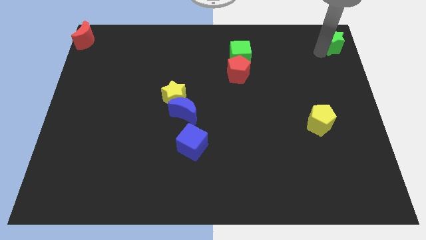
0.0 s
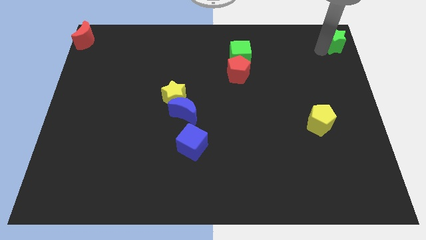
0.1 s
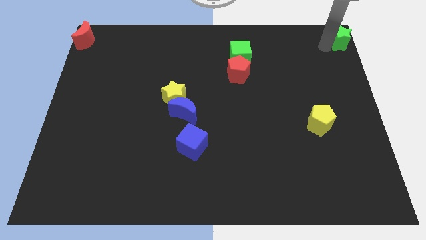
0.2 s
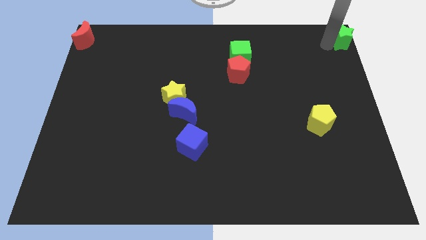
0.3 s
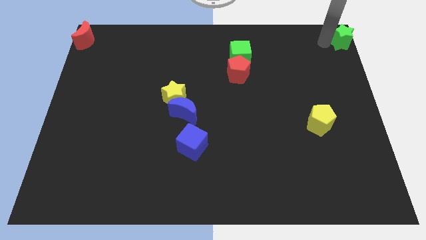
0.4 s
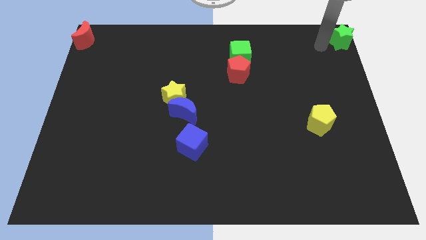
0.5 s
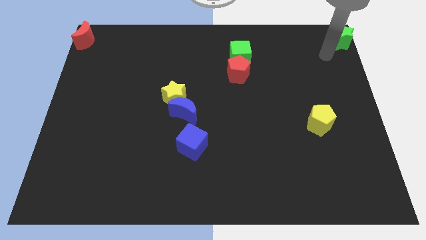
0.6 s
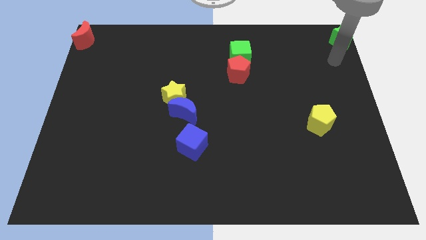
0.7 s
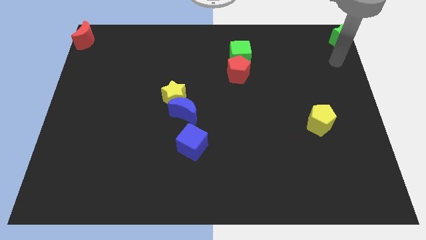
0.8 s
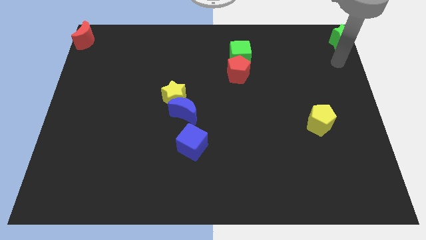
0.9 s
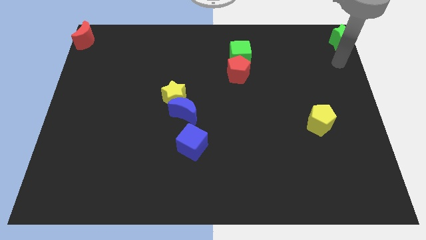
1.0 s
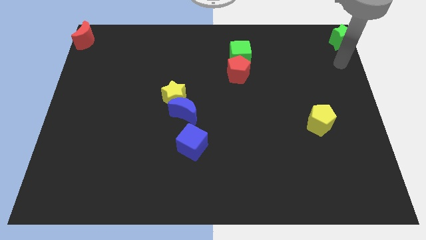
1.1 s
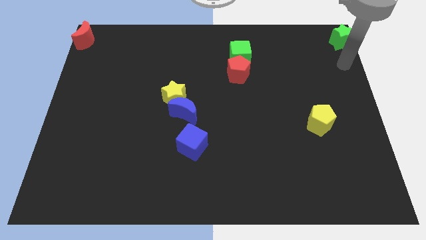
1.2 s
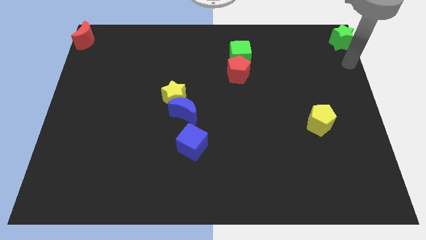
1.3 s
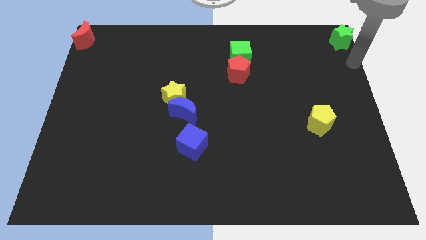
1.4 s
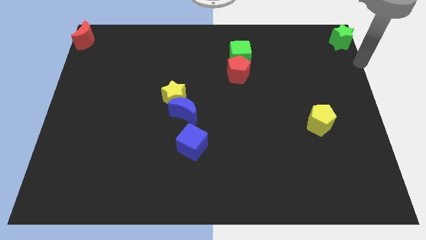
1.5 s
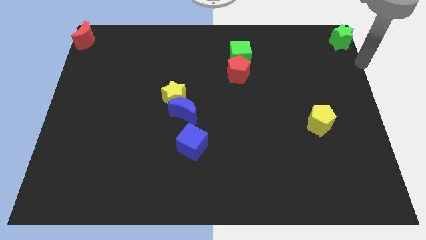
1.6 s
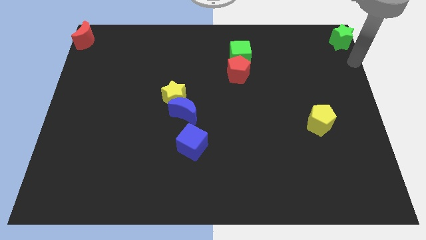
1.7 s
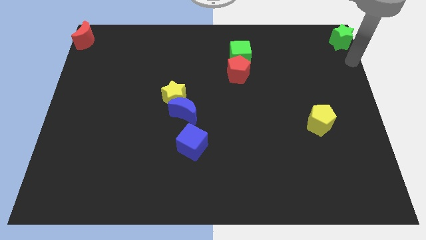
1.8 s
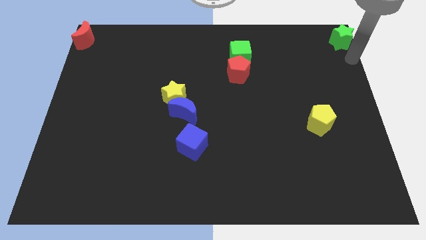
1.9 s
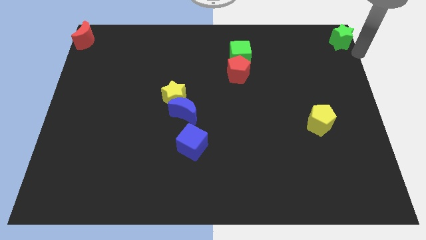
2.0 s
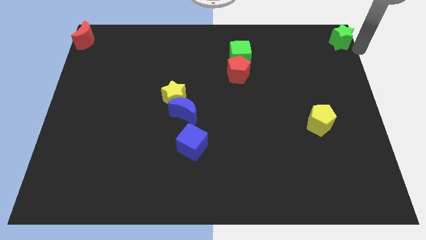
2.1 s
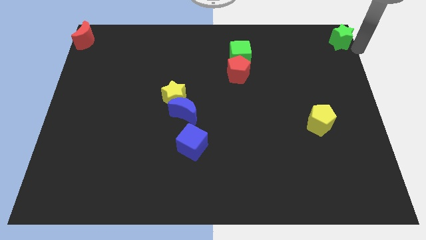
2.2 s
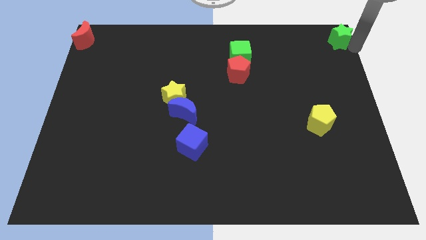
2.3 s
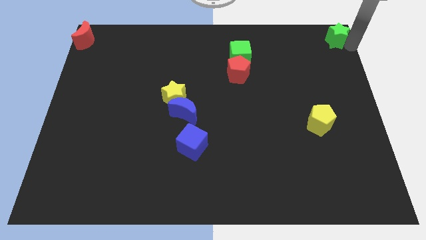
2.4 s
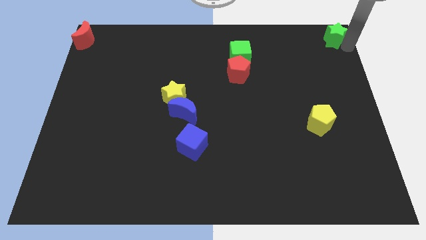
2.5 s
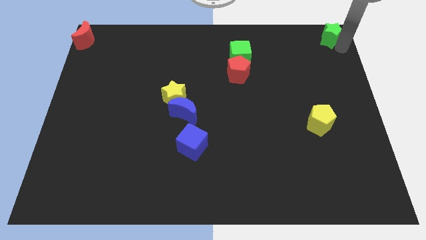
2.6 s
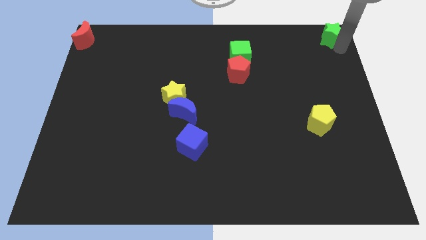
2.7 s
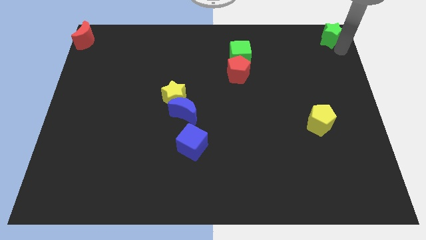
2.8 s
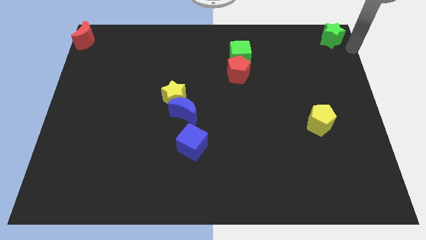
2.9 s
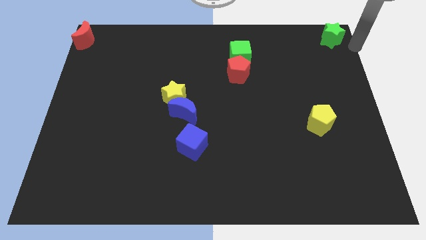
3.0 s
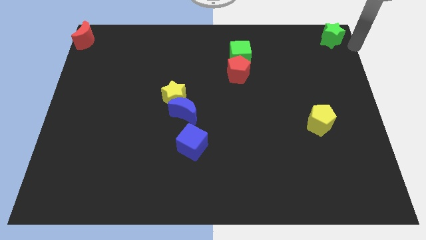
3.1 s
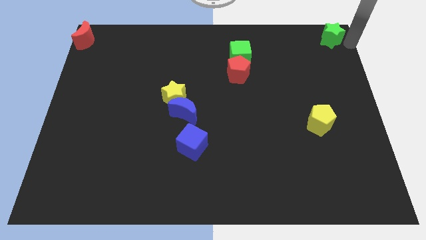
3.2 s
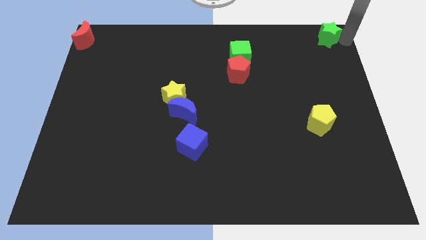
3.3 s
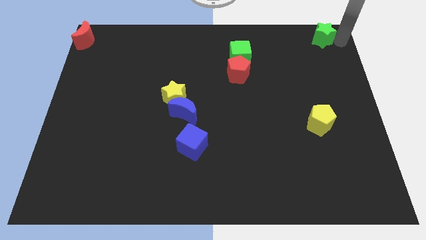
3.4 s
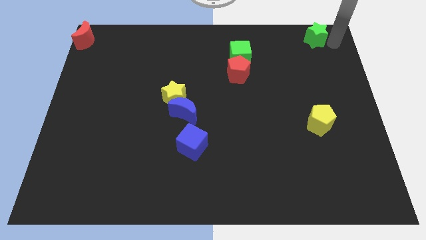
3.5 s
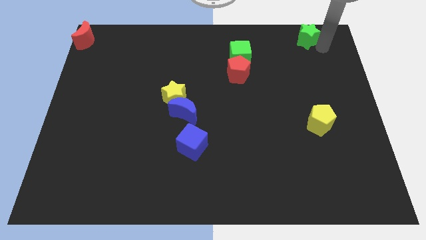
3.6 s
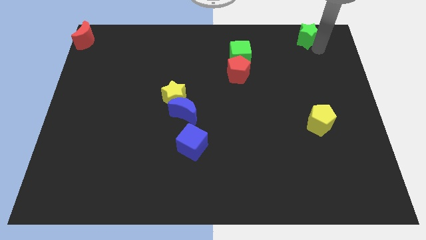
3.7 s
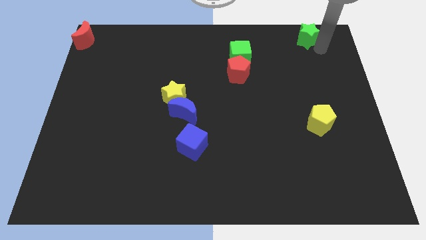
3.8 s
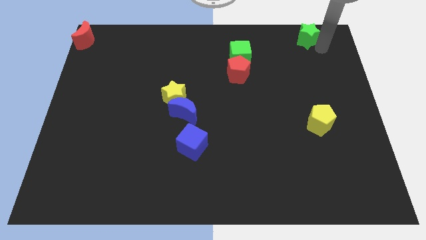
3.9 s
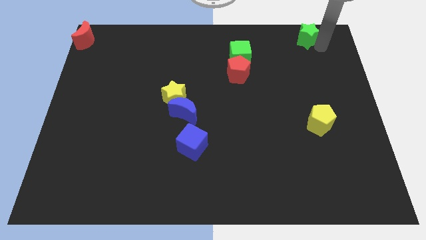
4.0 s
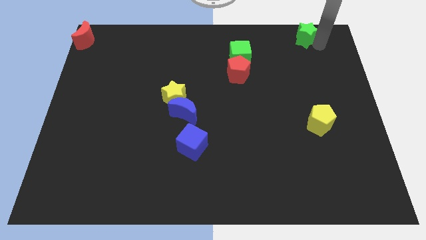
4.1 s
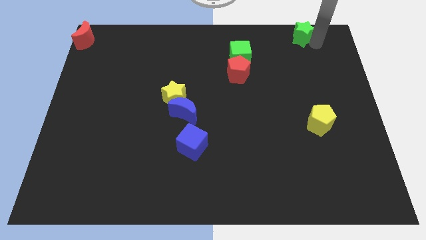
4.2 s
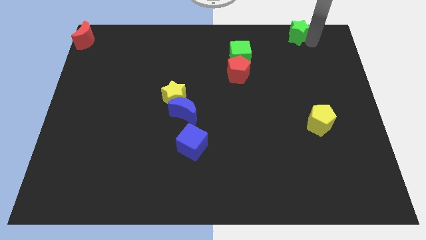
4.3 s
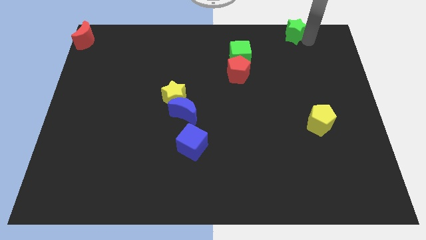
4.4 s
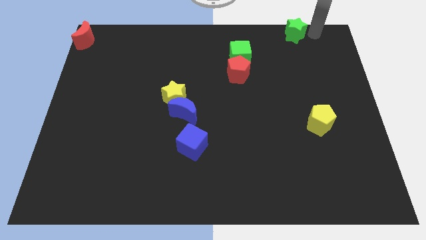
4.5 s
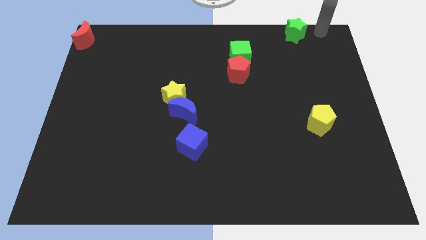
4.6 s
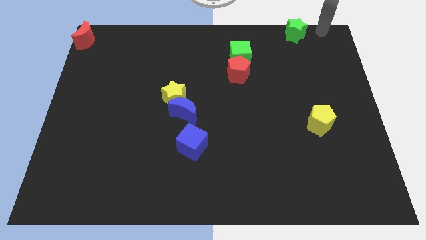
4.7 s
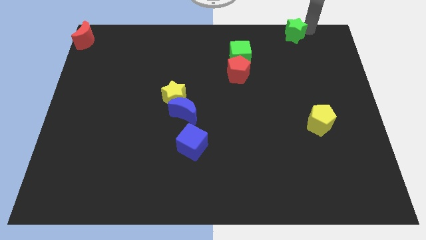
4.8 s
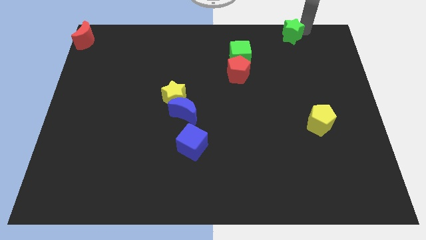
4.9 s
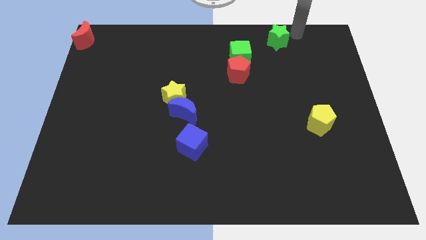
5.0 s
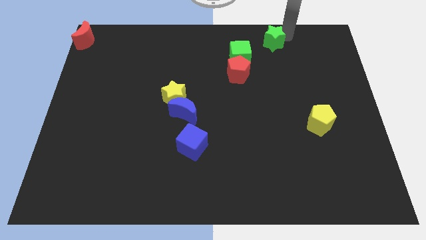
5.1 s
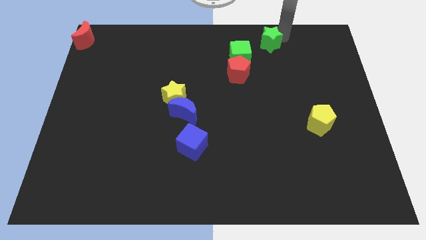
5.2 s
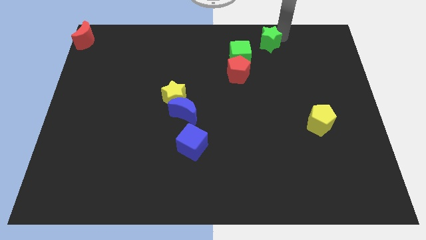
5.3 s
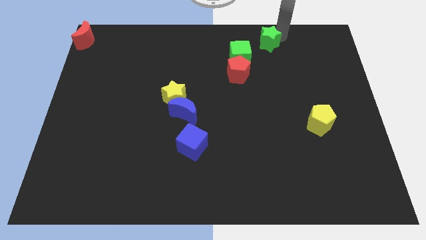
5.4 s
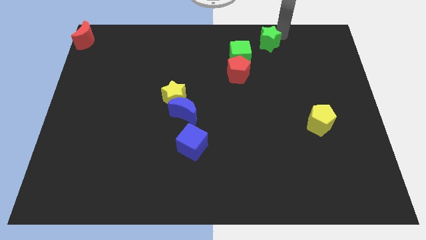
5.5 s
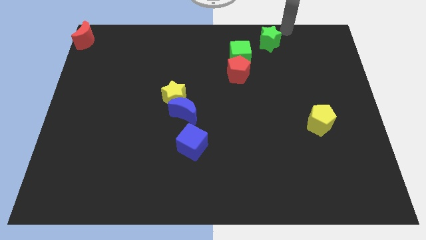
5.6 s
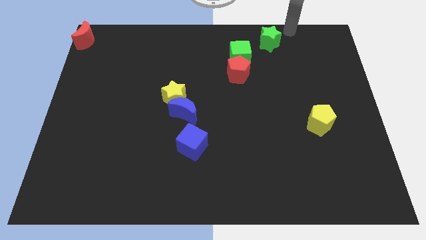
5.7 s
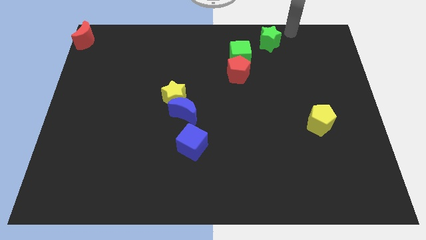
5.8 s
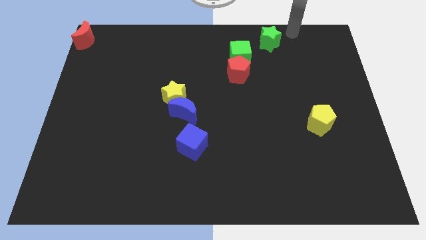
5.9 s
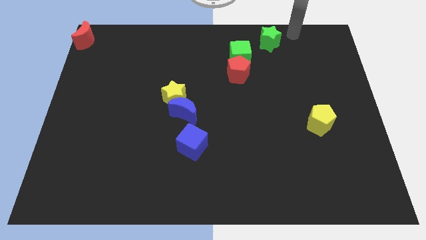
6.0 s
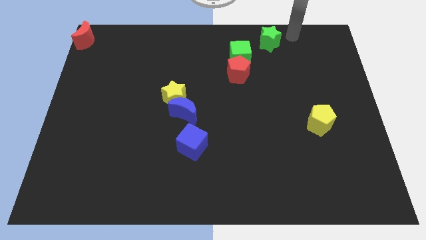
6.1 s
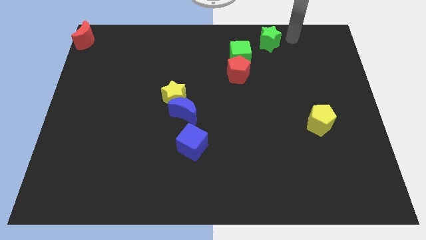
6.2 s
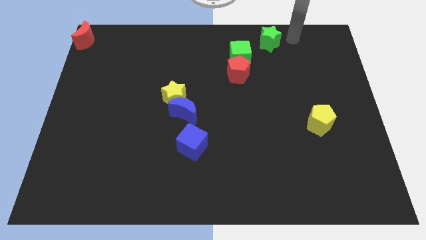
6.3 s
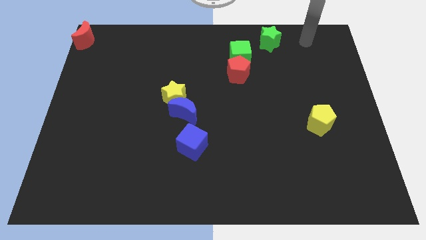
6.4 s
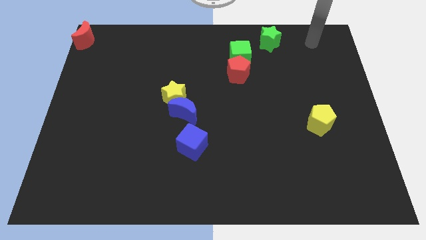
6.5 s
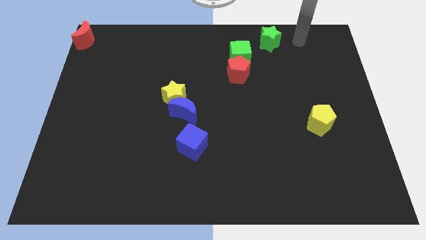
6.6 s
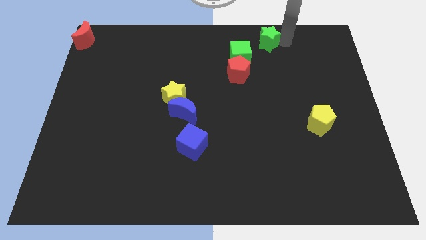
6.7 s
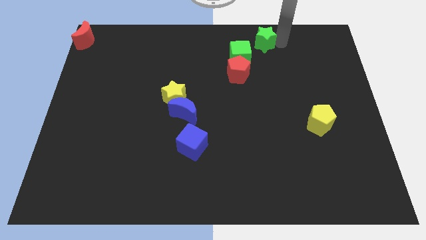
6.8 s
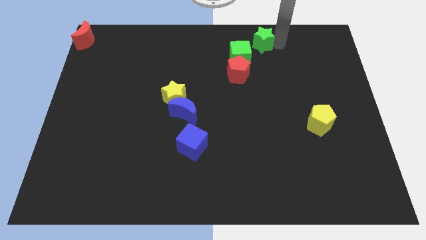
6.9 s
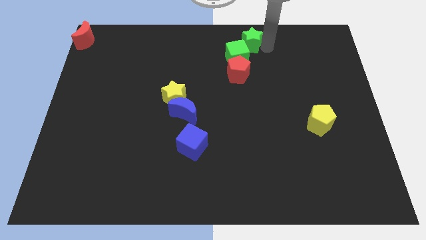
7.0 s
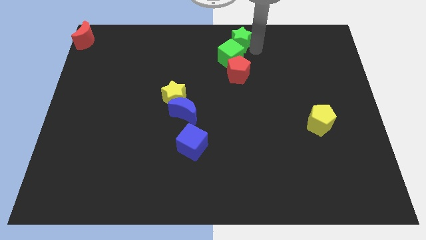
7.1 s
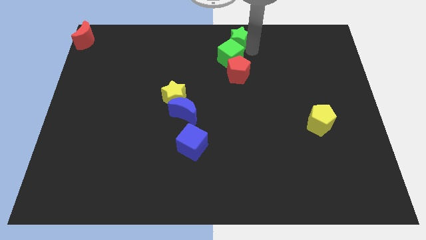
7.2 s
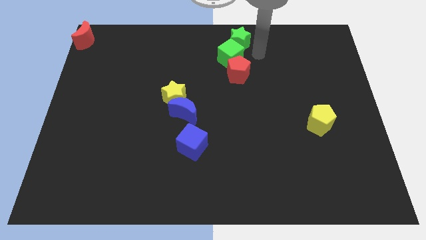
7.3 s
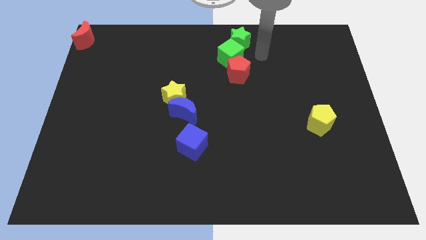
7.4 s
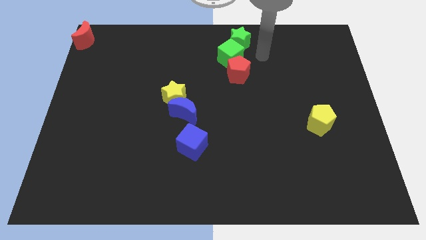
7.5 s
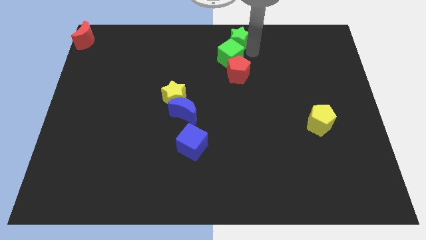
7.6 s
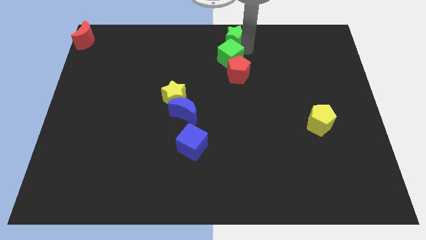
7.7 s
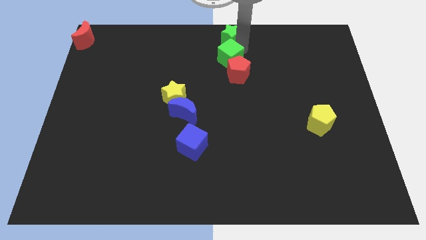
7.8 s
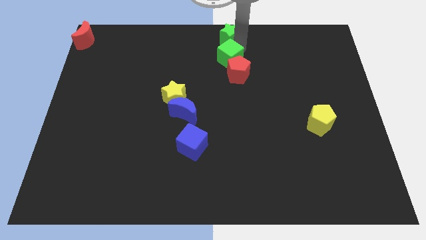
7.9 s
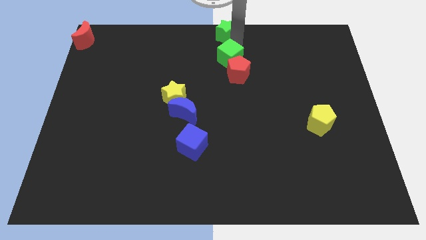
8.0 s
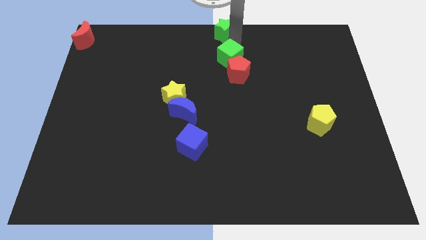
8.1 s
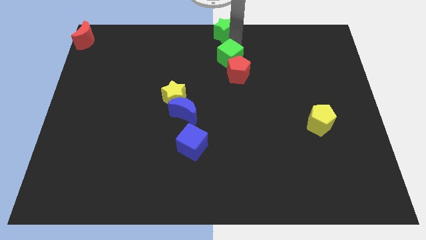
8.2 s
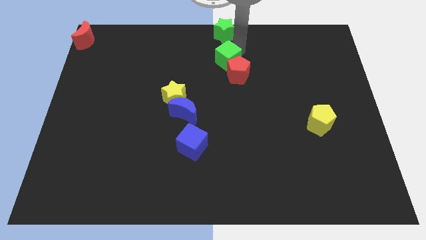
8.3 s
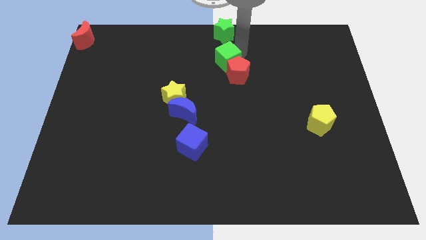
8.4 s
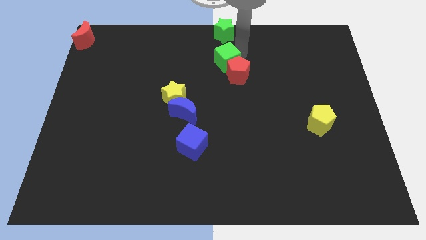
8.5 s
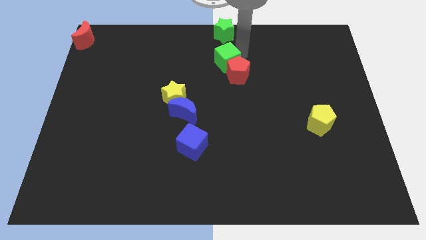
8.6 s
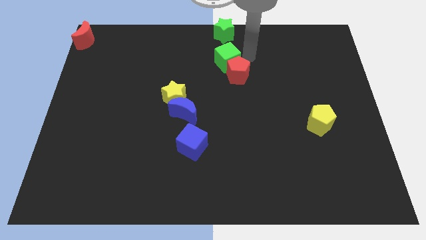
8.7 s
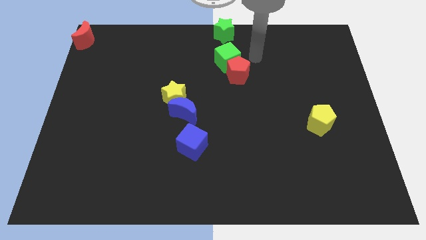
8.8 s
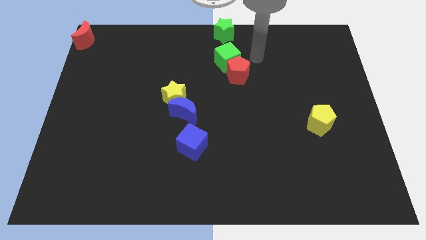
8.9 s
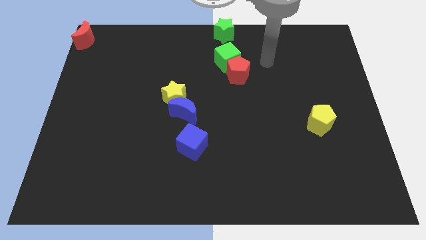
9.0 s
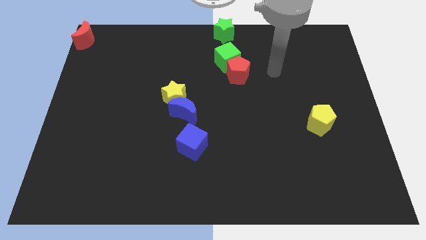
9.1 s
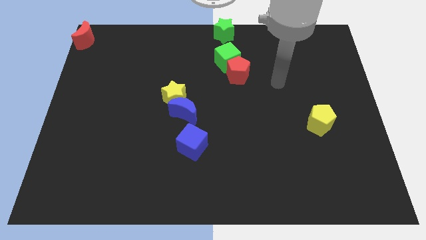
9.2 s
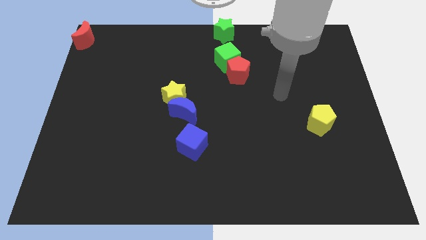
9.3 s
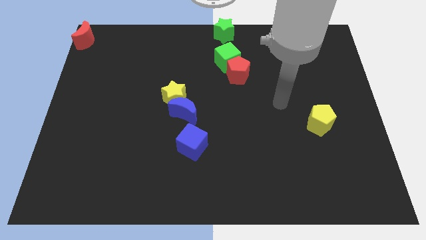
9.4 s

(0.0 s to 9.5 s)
slide the green star to the top center of the board
